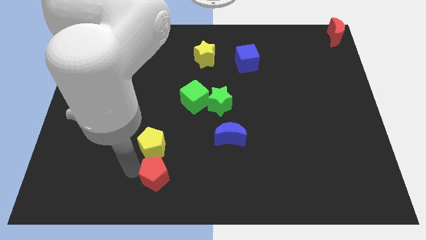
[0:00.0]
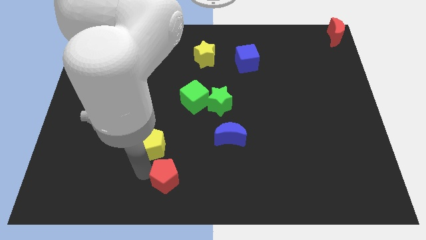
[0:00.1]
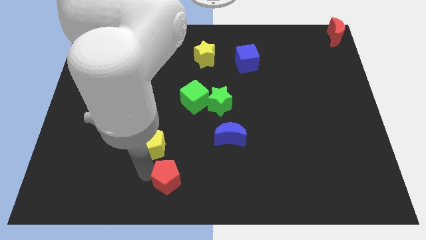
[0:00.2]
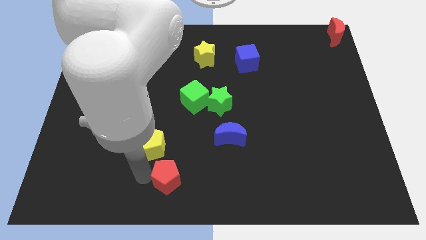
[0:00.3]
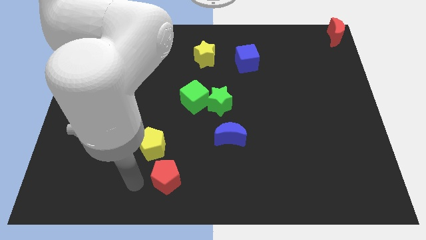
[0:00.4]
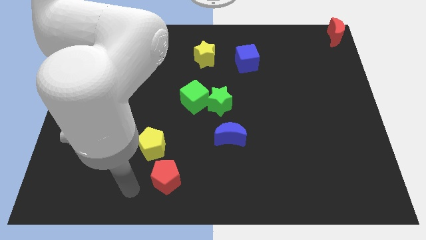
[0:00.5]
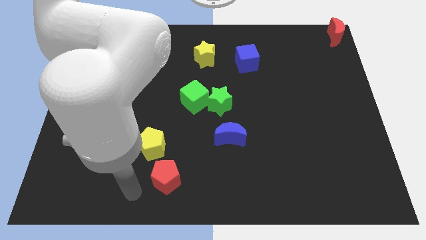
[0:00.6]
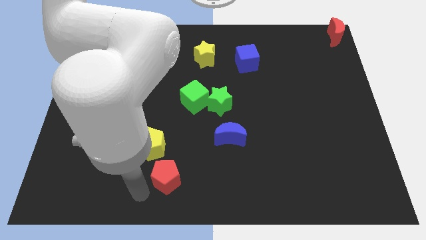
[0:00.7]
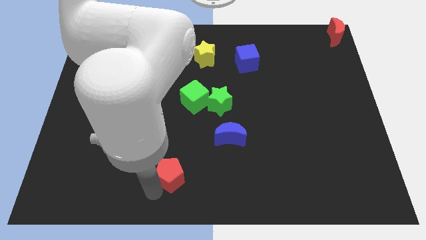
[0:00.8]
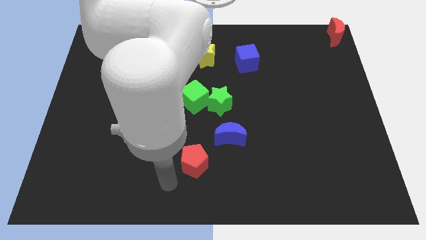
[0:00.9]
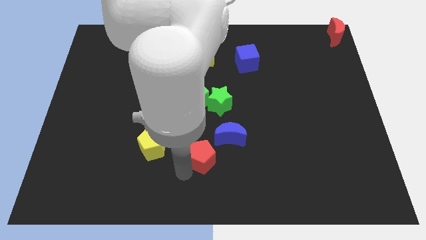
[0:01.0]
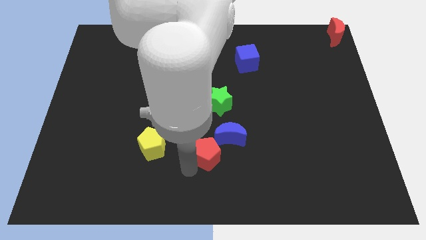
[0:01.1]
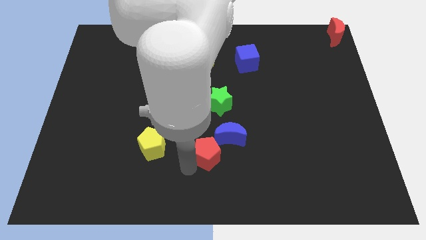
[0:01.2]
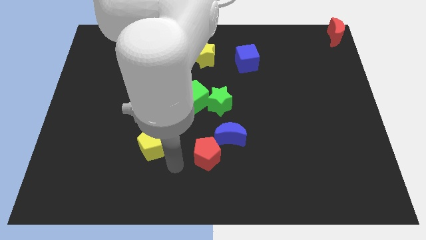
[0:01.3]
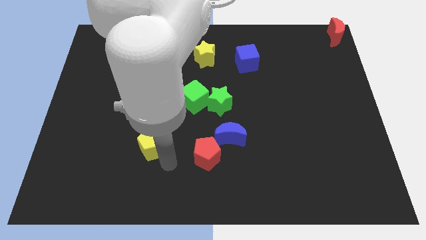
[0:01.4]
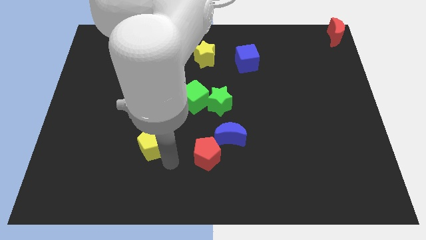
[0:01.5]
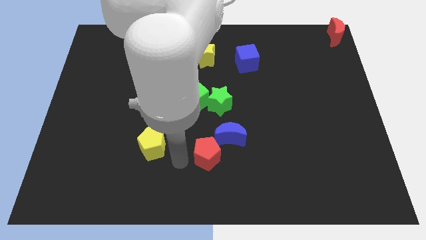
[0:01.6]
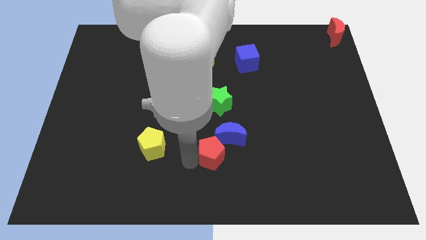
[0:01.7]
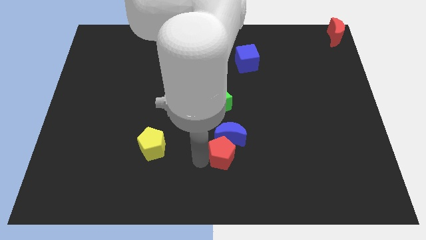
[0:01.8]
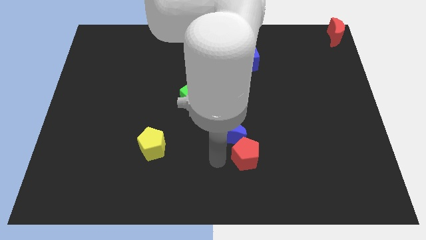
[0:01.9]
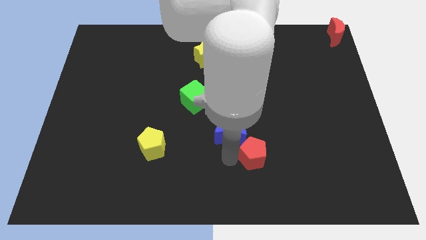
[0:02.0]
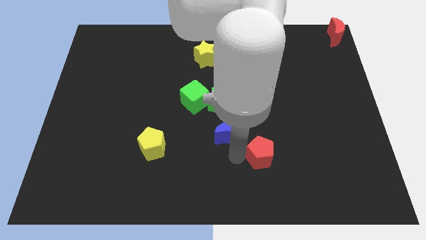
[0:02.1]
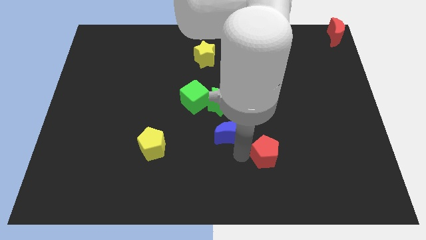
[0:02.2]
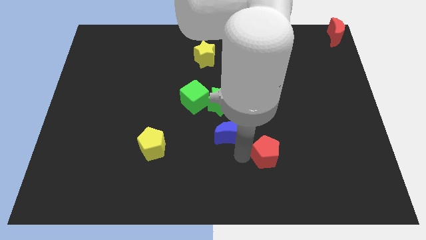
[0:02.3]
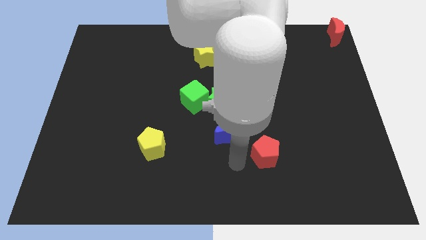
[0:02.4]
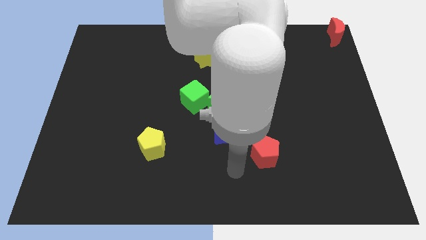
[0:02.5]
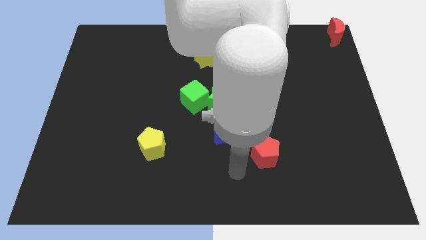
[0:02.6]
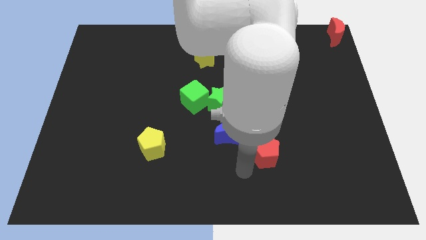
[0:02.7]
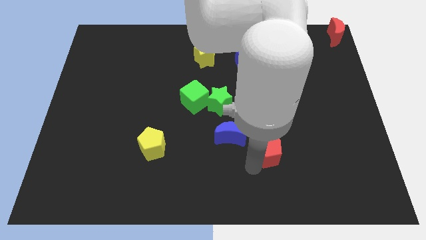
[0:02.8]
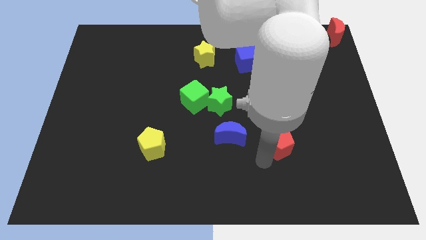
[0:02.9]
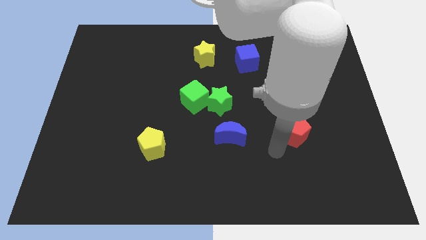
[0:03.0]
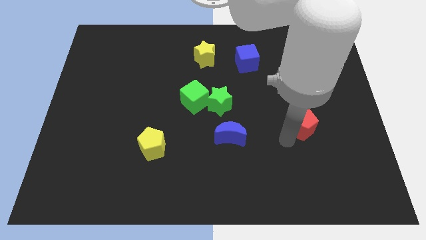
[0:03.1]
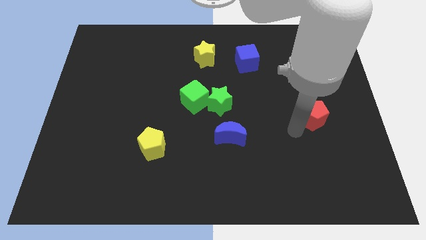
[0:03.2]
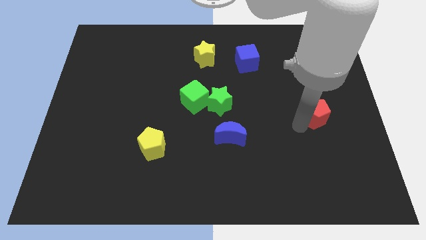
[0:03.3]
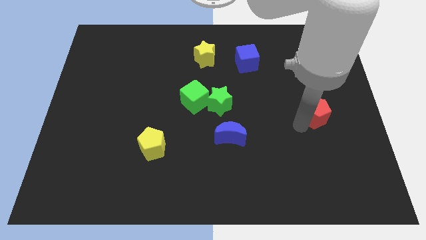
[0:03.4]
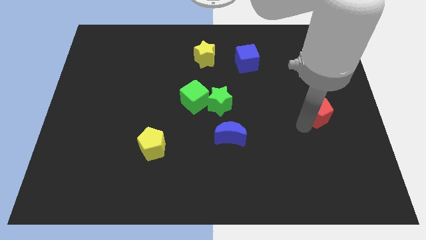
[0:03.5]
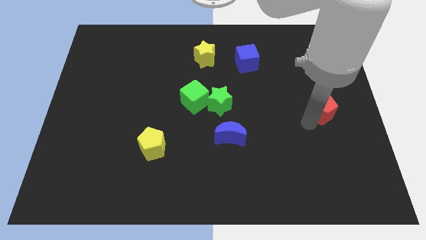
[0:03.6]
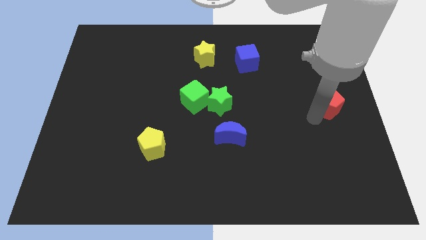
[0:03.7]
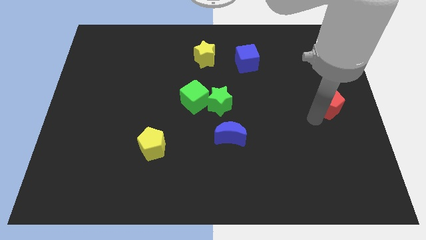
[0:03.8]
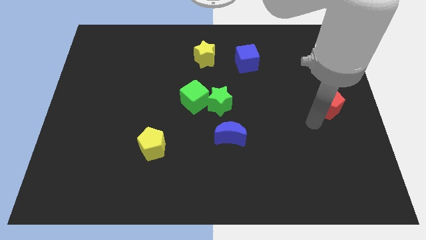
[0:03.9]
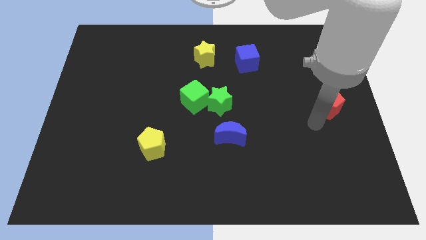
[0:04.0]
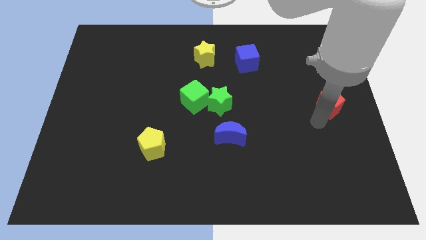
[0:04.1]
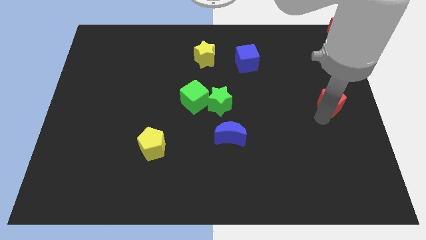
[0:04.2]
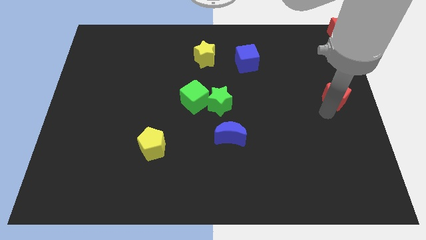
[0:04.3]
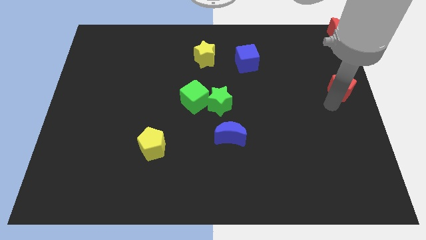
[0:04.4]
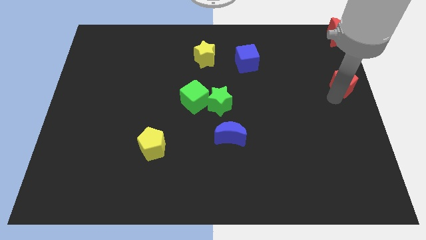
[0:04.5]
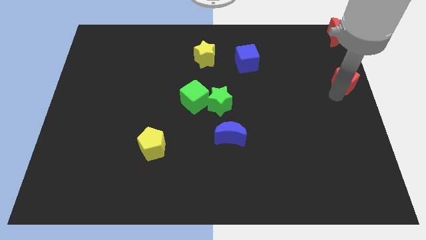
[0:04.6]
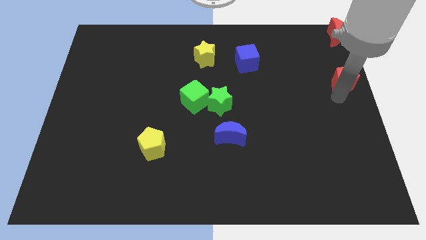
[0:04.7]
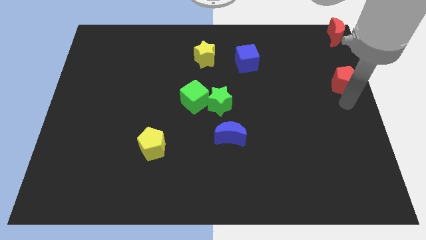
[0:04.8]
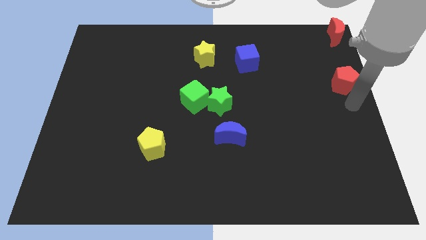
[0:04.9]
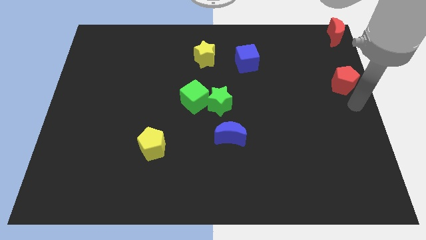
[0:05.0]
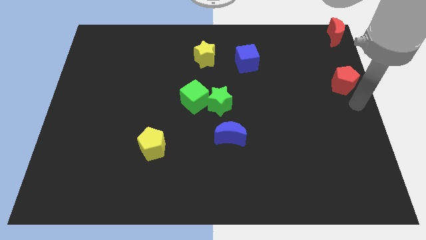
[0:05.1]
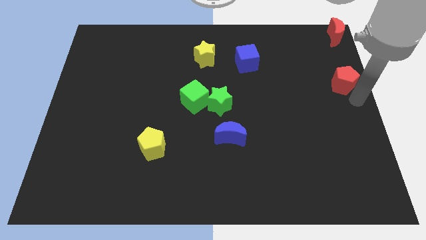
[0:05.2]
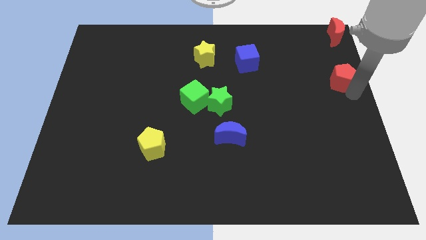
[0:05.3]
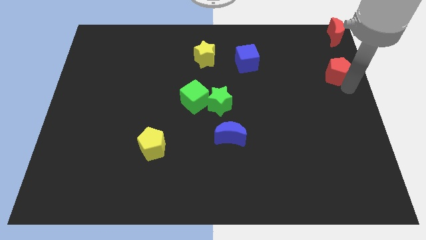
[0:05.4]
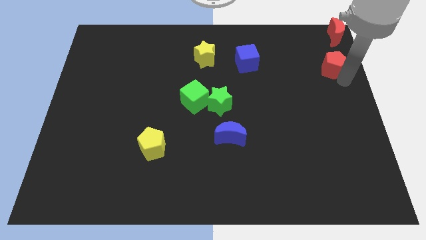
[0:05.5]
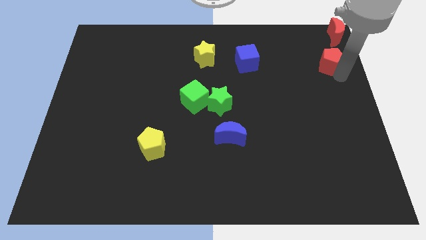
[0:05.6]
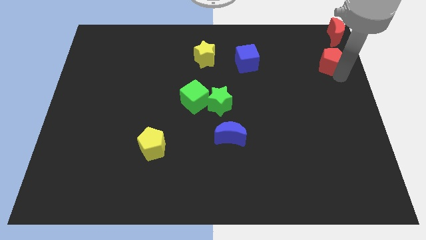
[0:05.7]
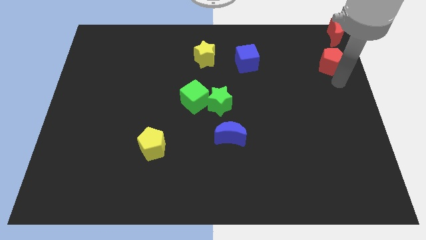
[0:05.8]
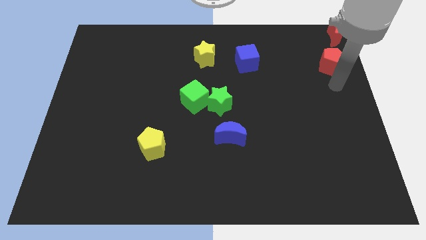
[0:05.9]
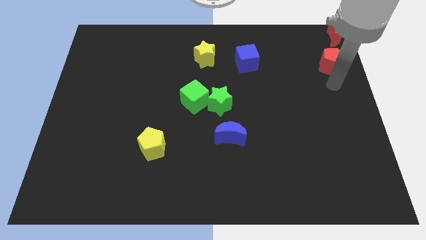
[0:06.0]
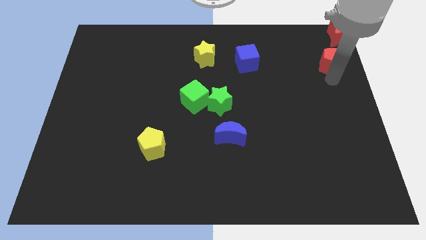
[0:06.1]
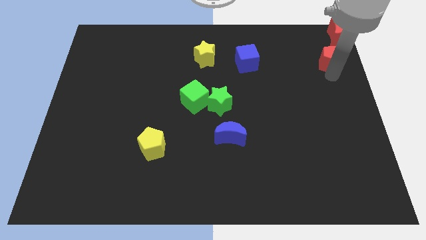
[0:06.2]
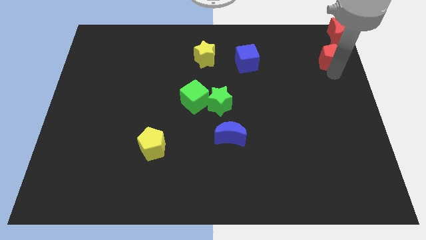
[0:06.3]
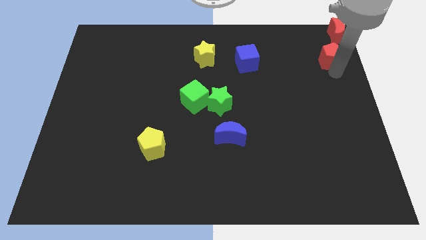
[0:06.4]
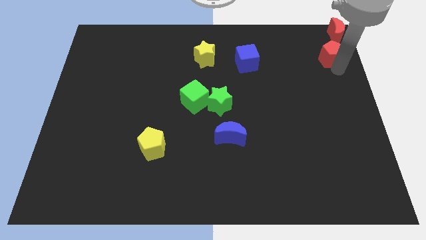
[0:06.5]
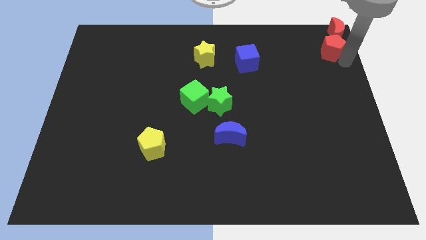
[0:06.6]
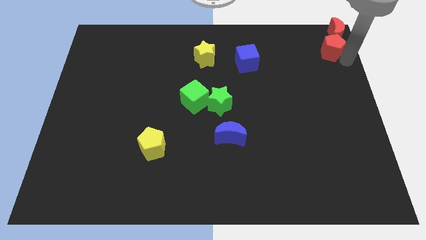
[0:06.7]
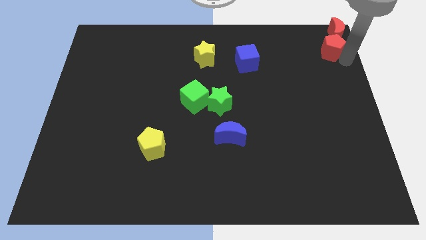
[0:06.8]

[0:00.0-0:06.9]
move red pentagon into red moon

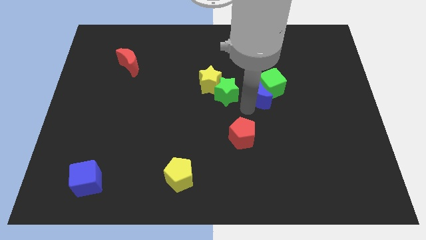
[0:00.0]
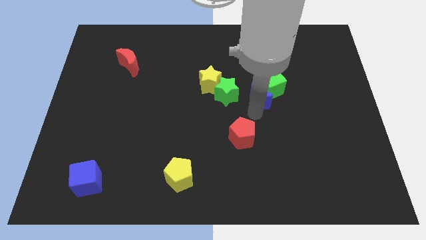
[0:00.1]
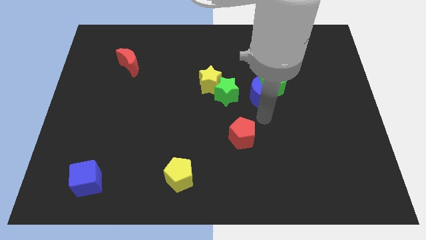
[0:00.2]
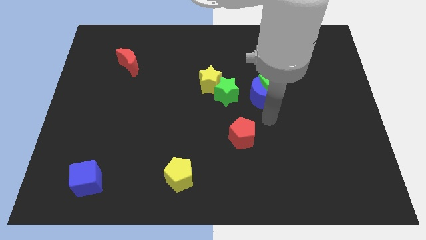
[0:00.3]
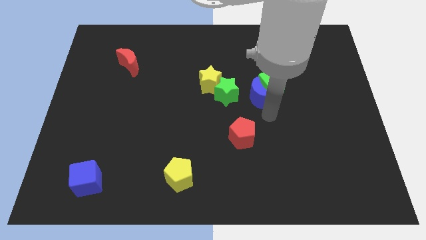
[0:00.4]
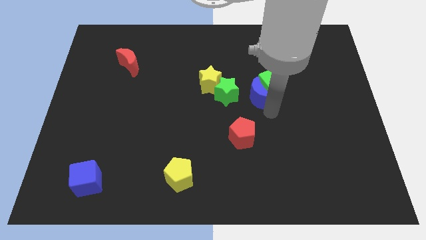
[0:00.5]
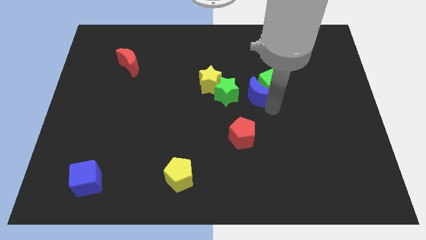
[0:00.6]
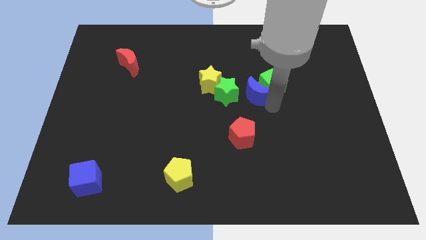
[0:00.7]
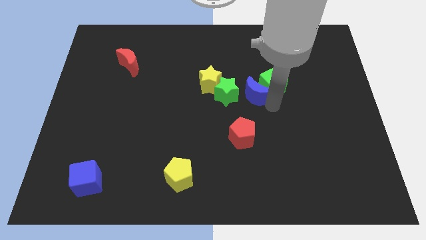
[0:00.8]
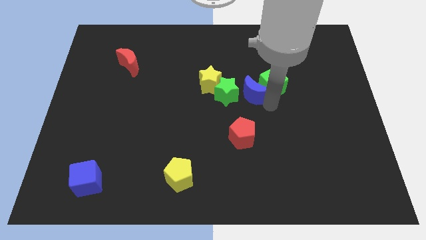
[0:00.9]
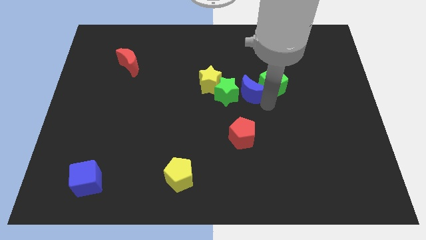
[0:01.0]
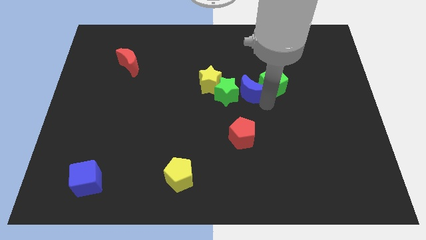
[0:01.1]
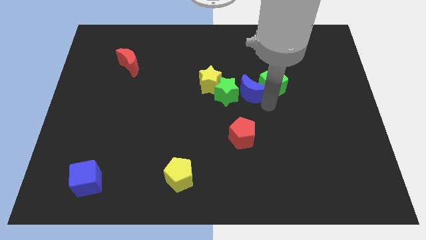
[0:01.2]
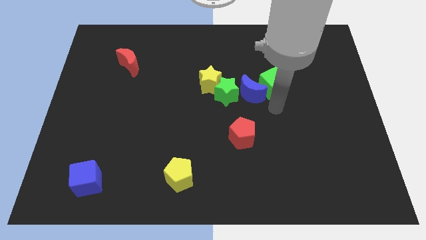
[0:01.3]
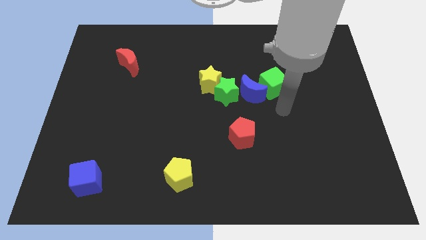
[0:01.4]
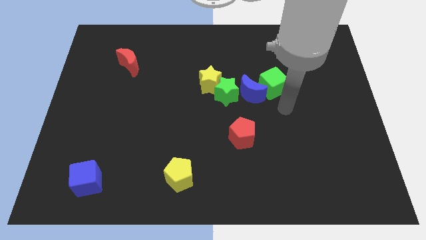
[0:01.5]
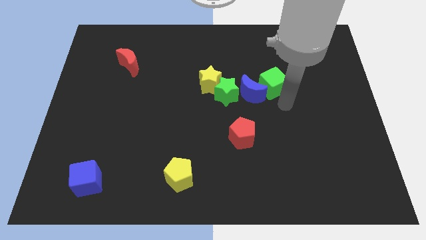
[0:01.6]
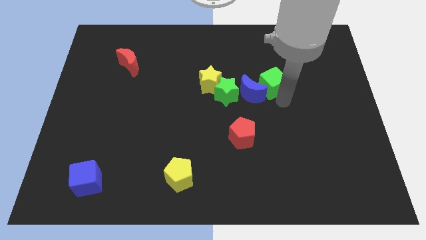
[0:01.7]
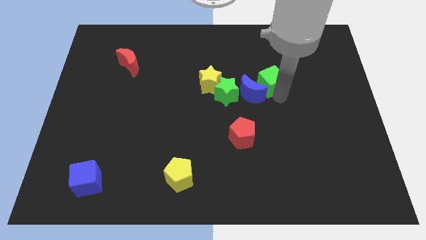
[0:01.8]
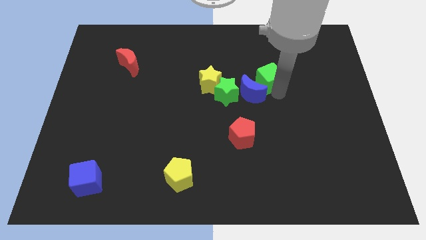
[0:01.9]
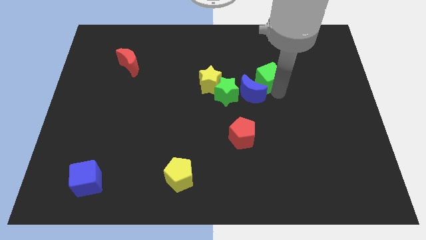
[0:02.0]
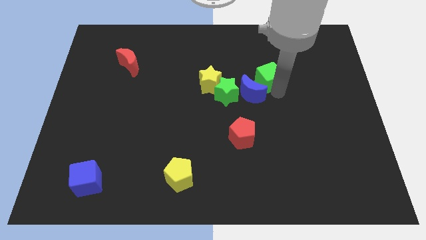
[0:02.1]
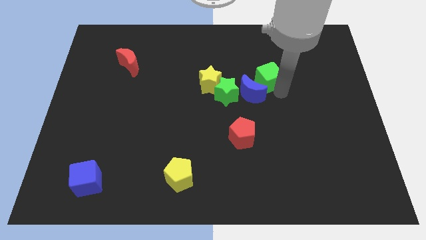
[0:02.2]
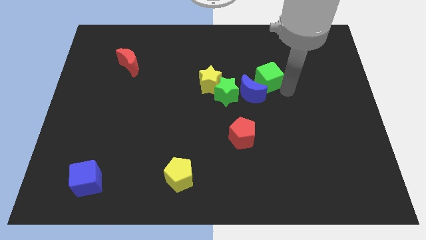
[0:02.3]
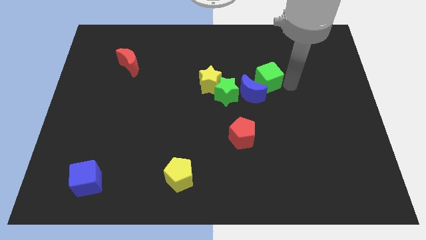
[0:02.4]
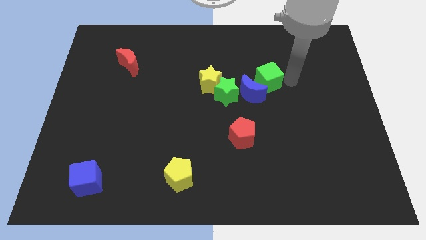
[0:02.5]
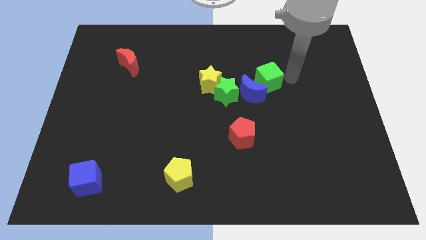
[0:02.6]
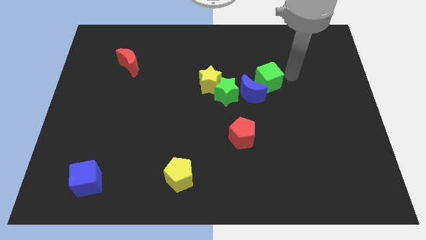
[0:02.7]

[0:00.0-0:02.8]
move arm beside green cube
